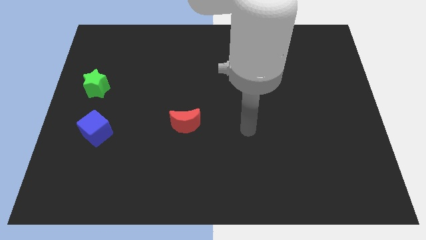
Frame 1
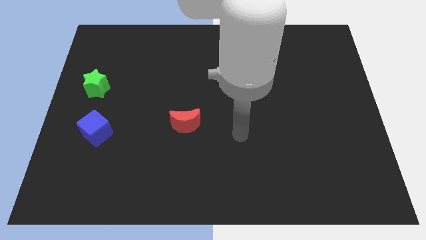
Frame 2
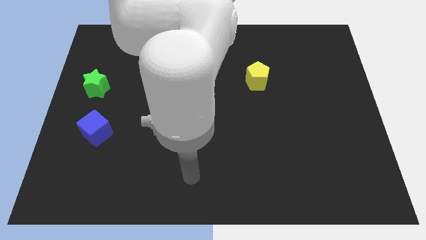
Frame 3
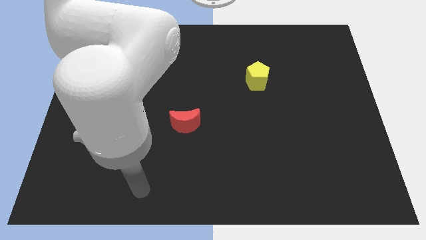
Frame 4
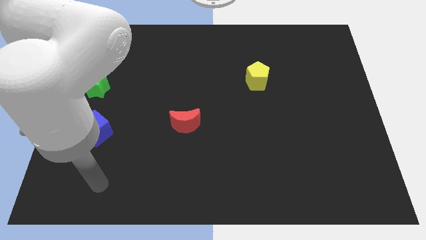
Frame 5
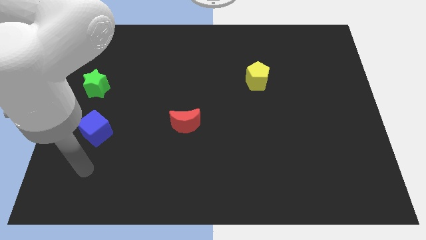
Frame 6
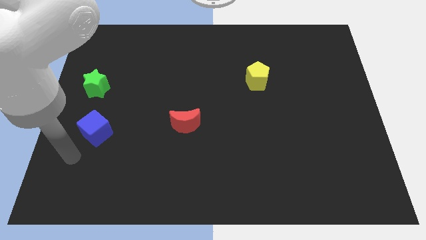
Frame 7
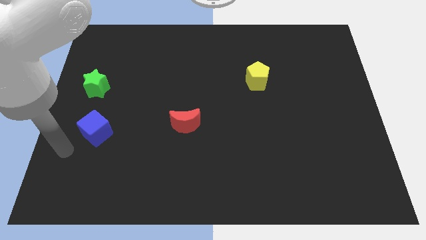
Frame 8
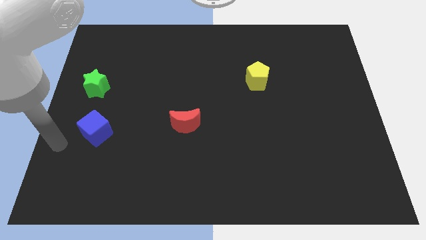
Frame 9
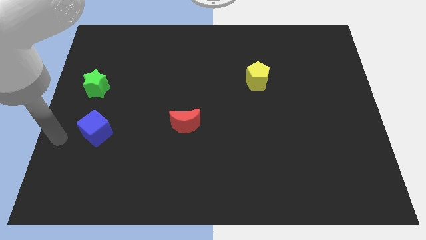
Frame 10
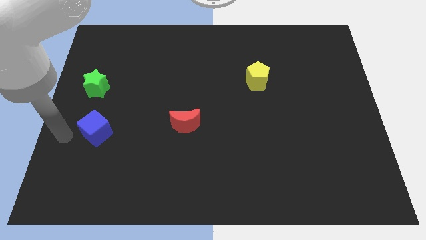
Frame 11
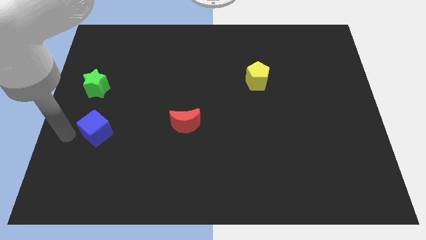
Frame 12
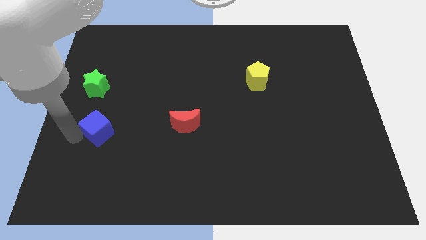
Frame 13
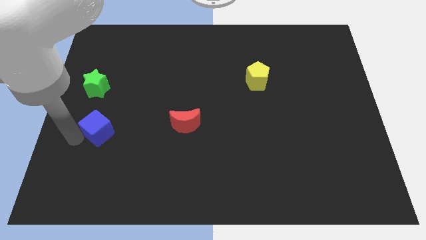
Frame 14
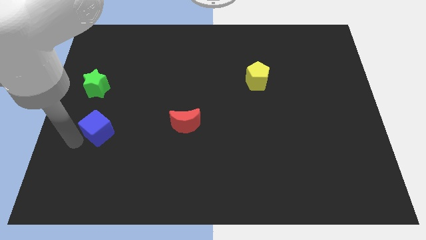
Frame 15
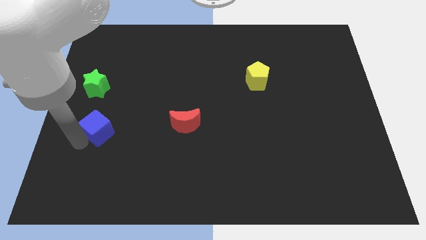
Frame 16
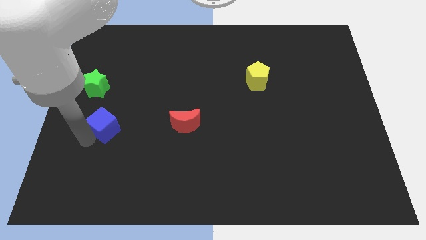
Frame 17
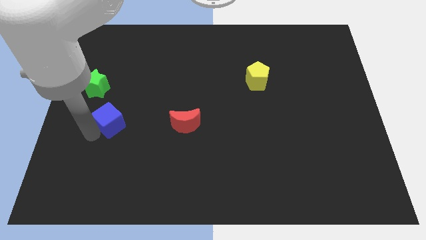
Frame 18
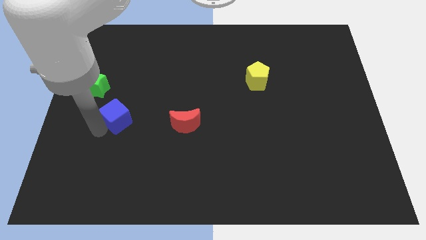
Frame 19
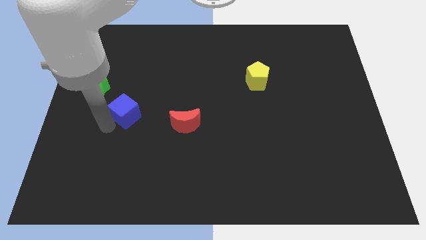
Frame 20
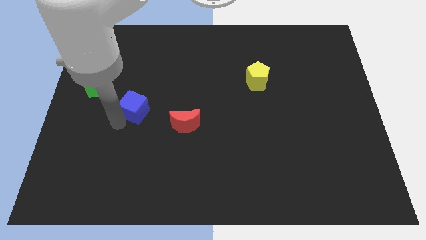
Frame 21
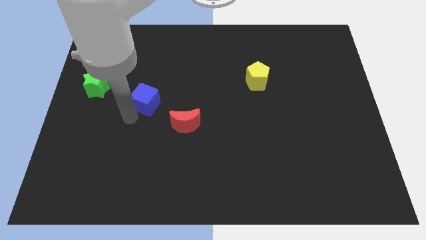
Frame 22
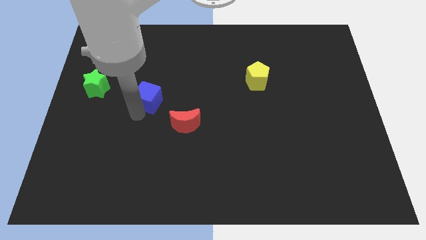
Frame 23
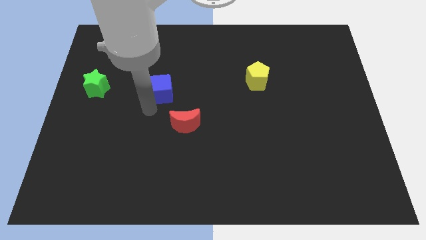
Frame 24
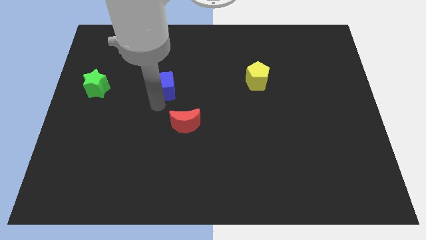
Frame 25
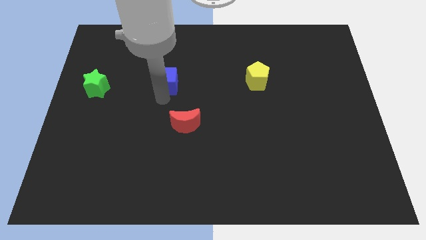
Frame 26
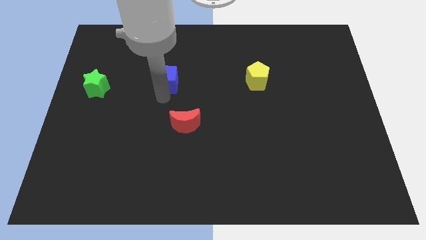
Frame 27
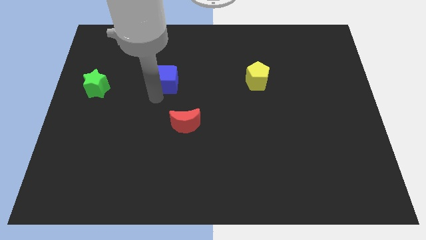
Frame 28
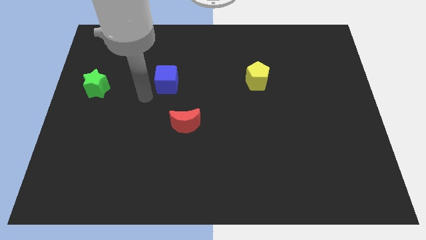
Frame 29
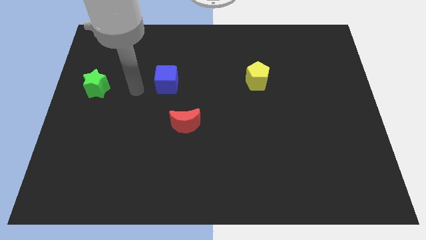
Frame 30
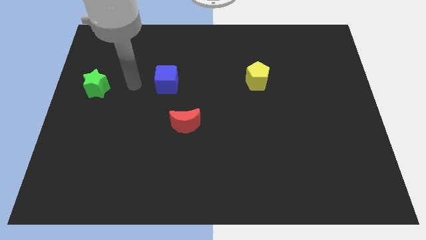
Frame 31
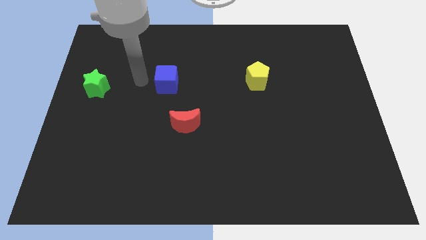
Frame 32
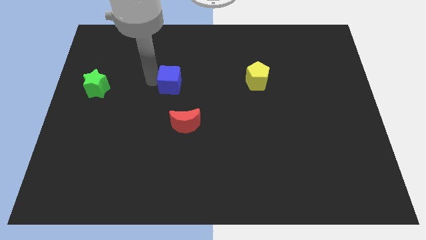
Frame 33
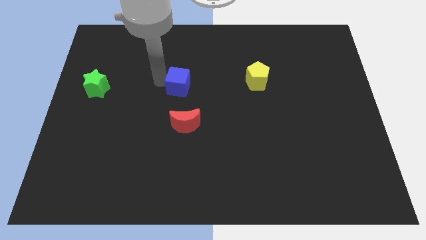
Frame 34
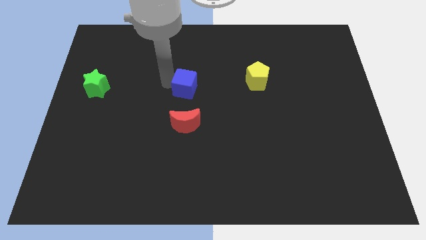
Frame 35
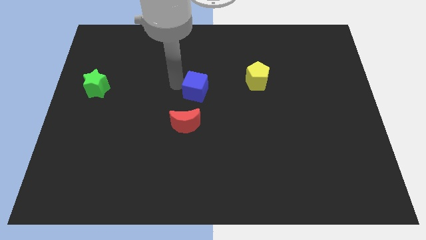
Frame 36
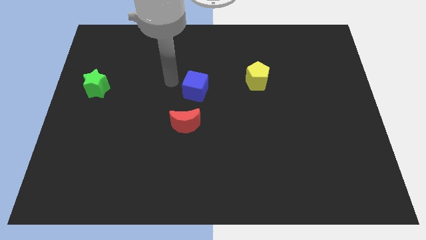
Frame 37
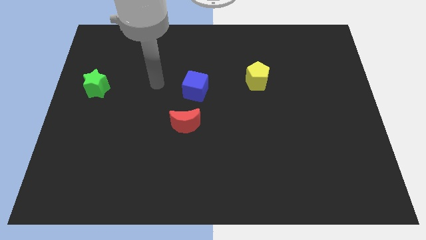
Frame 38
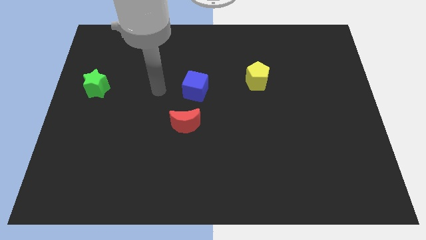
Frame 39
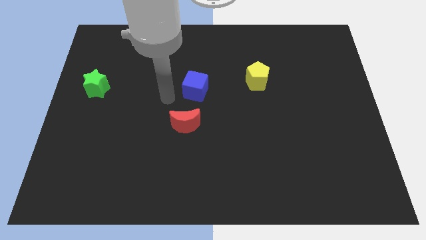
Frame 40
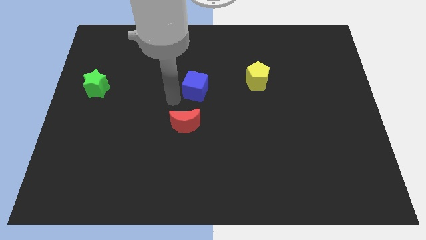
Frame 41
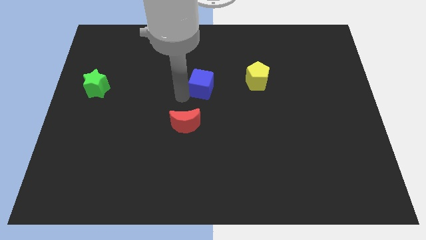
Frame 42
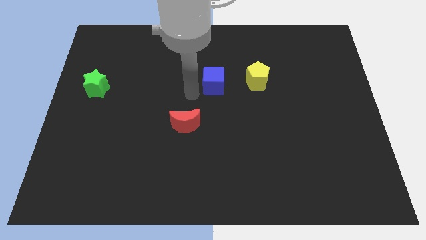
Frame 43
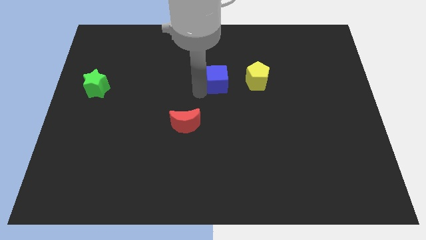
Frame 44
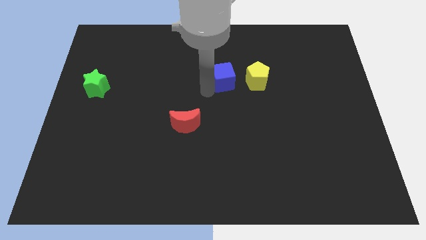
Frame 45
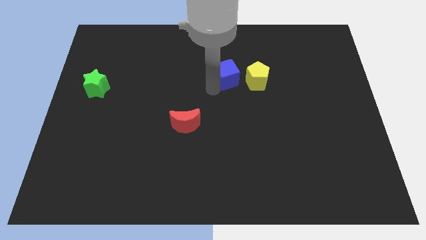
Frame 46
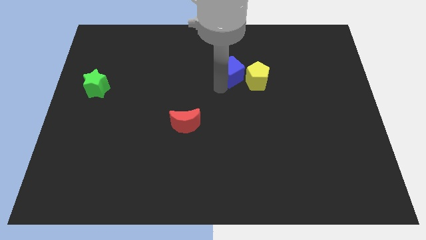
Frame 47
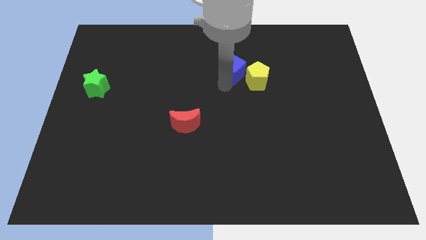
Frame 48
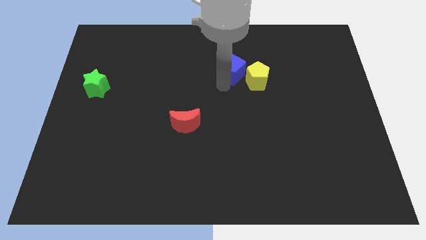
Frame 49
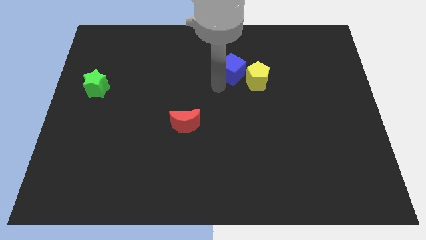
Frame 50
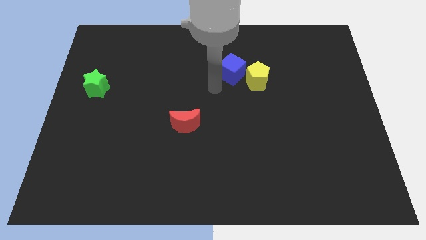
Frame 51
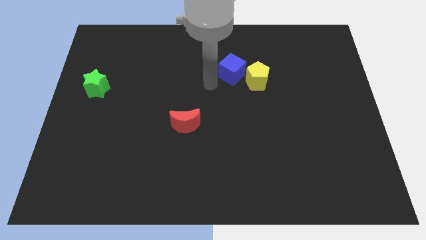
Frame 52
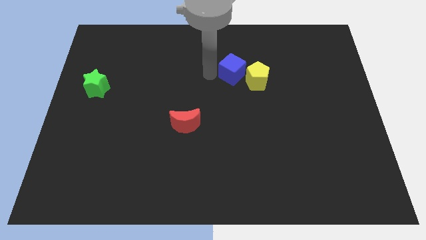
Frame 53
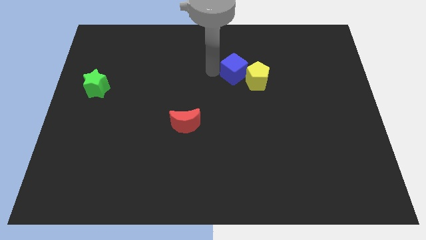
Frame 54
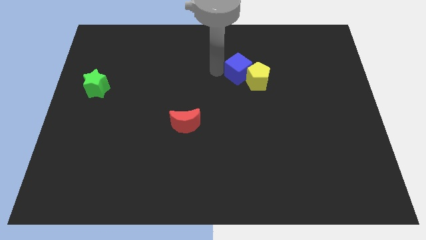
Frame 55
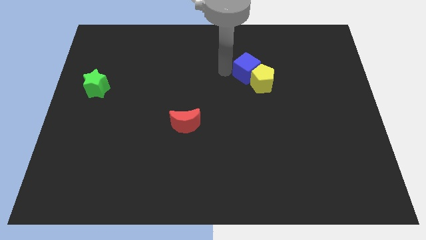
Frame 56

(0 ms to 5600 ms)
put the cube next to the yellow block

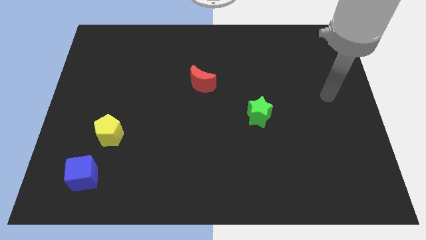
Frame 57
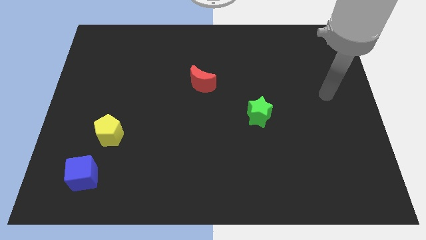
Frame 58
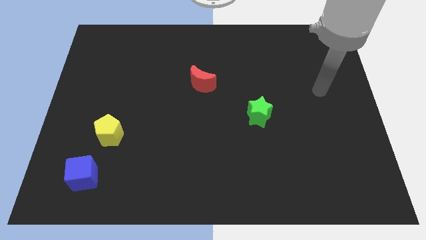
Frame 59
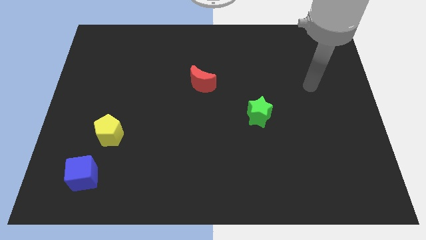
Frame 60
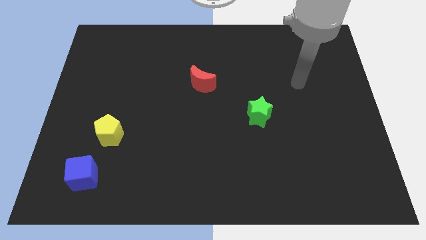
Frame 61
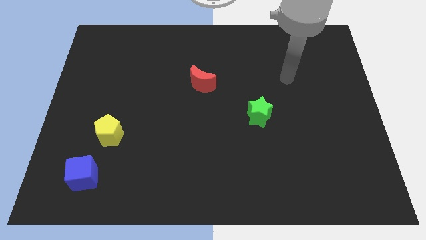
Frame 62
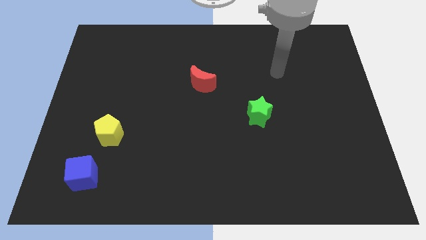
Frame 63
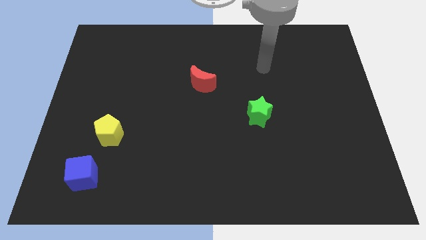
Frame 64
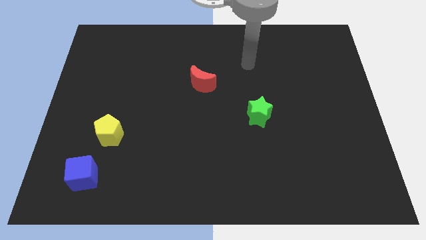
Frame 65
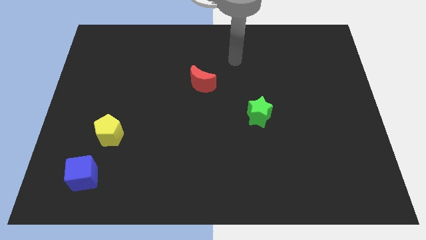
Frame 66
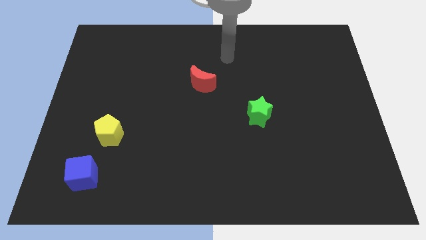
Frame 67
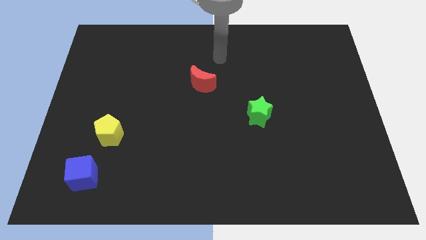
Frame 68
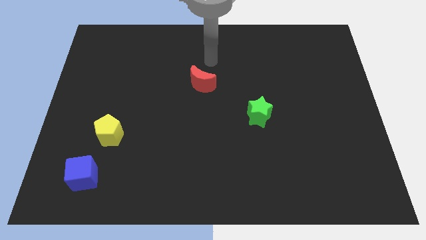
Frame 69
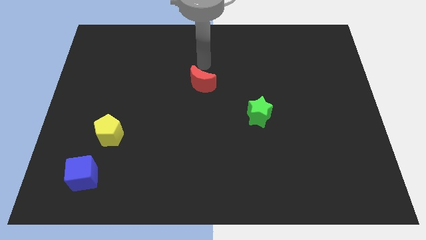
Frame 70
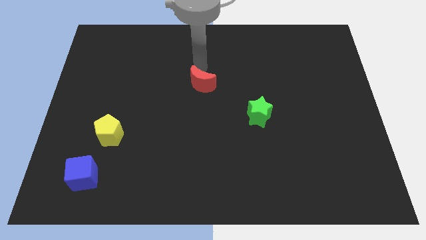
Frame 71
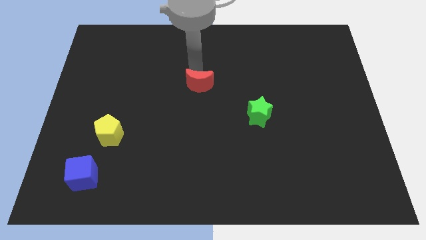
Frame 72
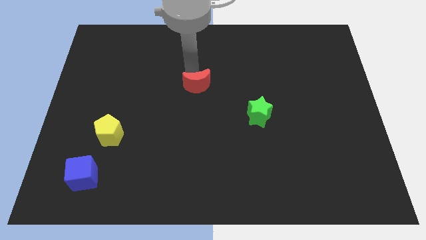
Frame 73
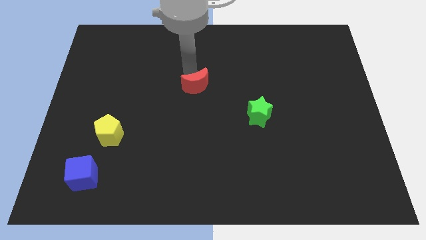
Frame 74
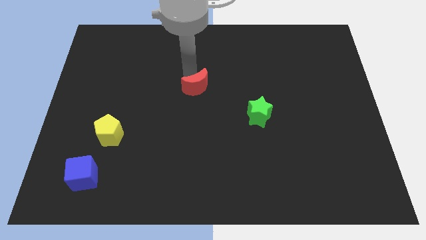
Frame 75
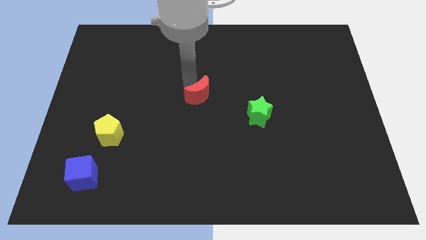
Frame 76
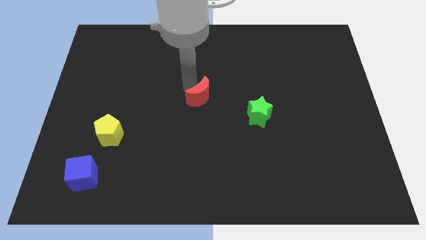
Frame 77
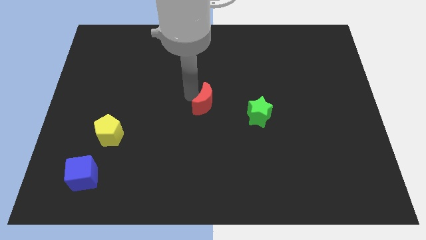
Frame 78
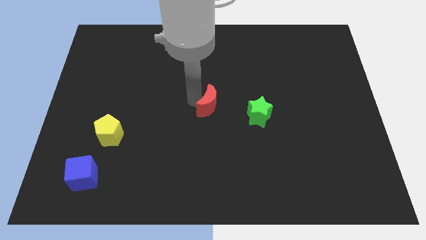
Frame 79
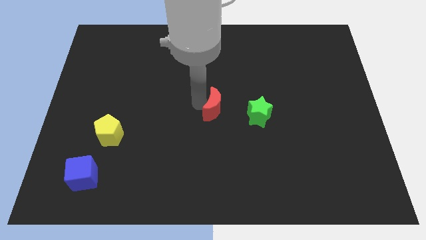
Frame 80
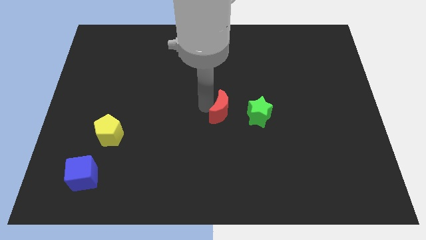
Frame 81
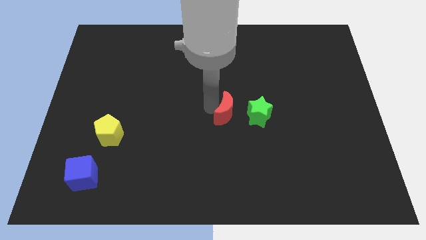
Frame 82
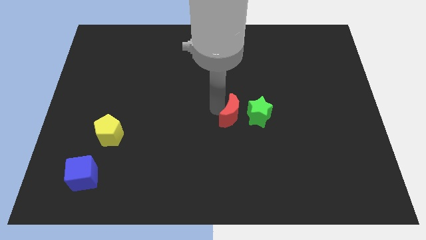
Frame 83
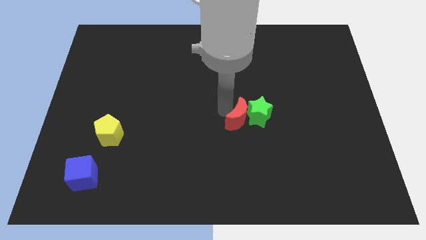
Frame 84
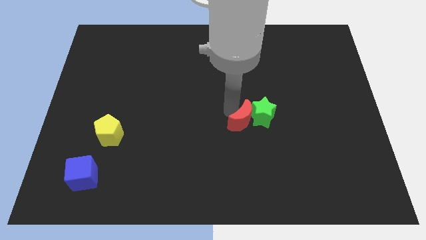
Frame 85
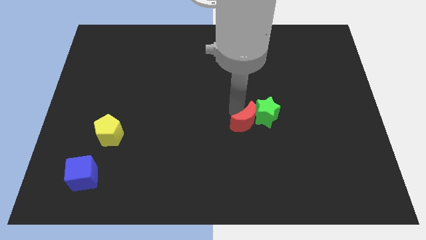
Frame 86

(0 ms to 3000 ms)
push the red block next to the green block

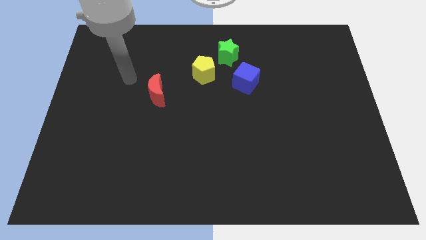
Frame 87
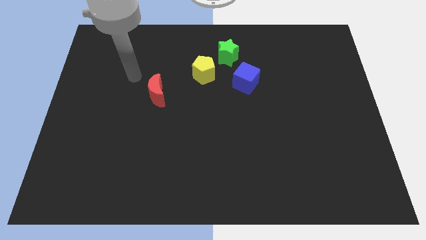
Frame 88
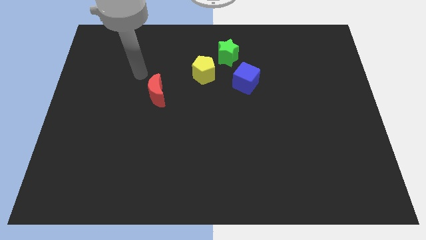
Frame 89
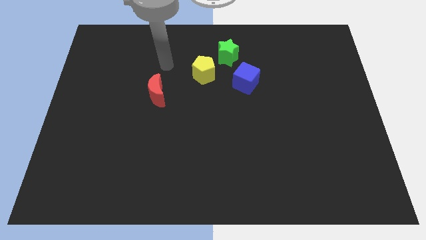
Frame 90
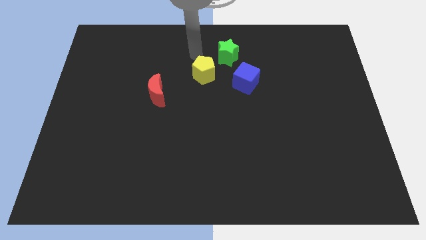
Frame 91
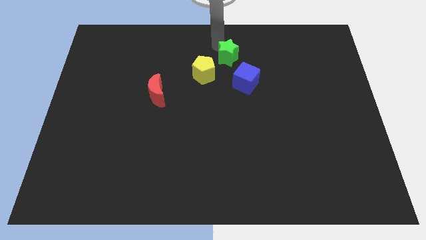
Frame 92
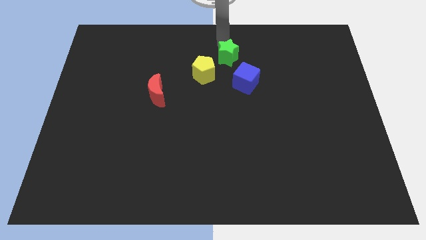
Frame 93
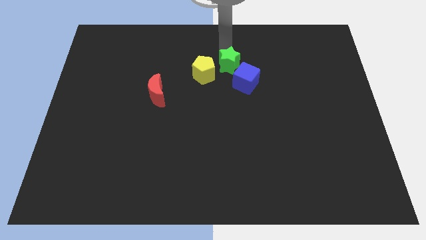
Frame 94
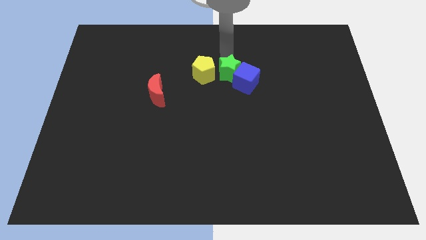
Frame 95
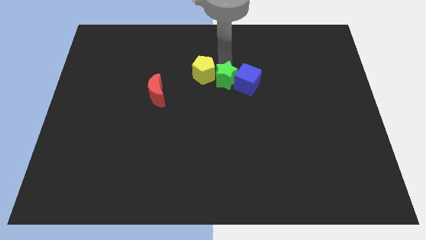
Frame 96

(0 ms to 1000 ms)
push the green block towards the cube
